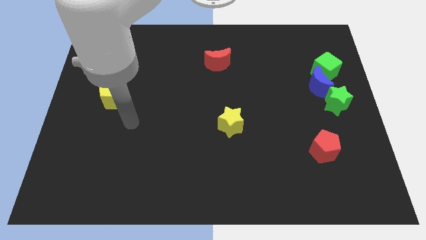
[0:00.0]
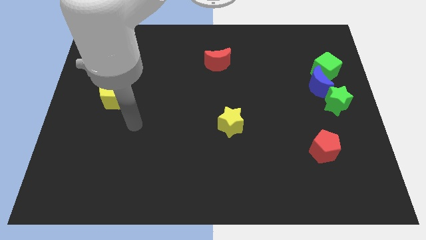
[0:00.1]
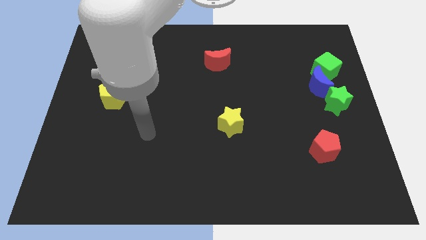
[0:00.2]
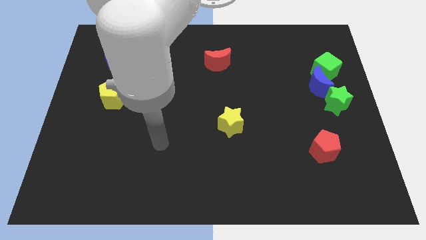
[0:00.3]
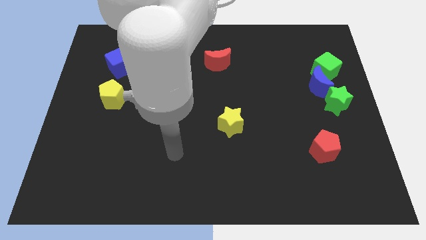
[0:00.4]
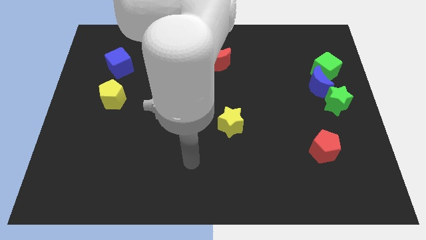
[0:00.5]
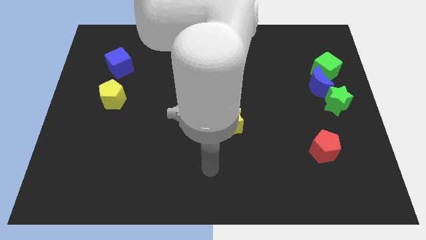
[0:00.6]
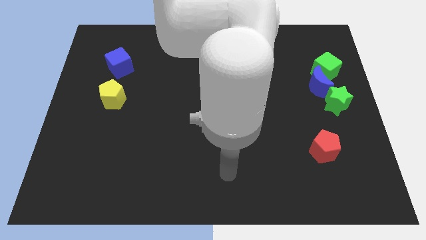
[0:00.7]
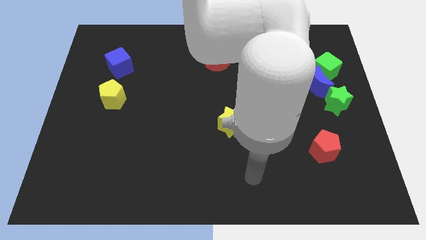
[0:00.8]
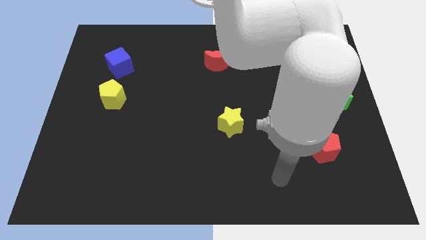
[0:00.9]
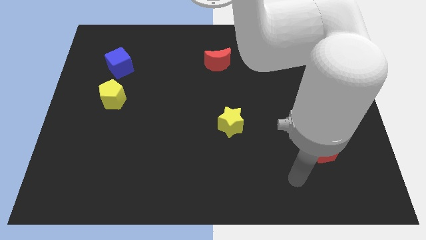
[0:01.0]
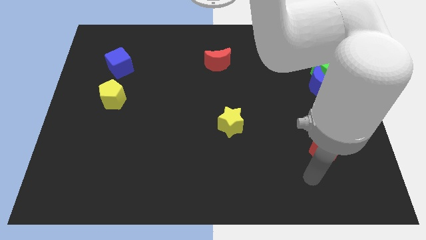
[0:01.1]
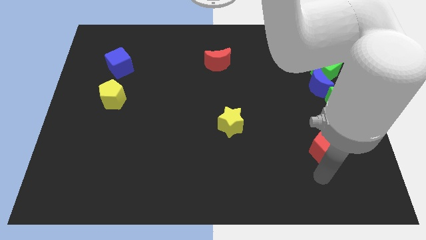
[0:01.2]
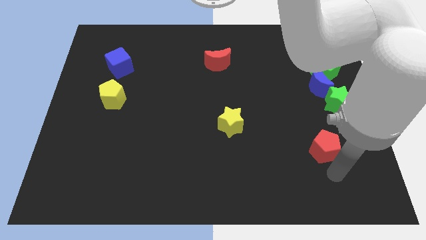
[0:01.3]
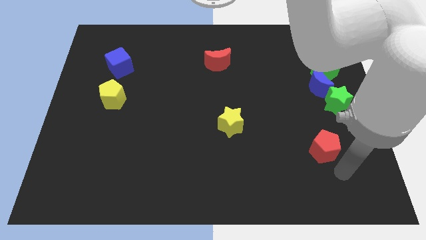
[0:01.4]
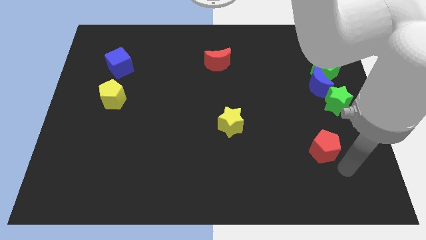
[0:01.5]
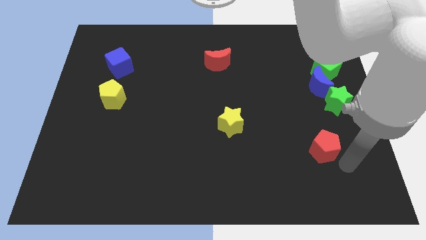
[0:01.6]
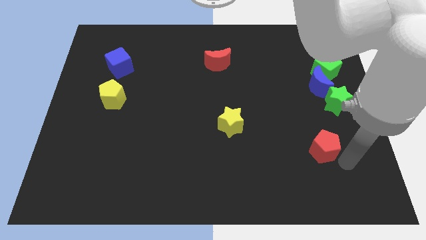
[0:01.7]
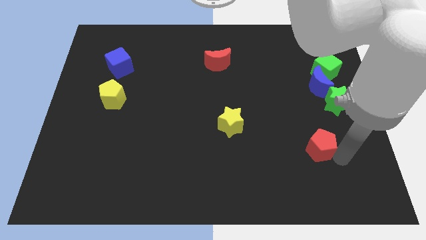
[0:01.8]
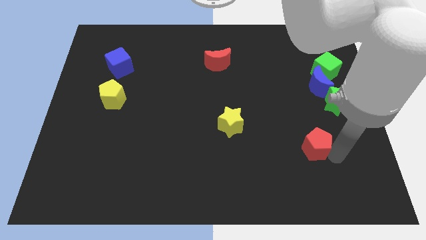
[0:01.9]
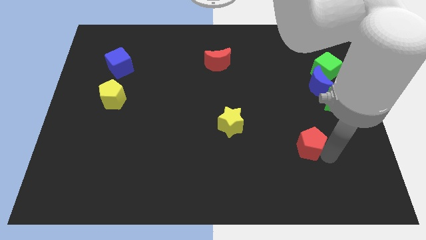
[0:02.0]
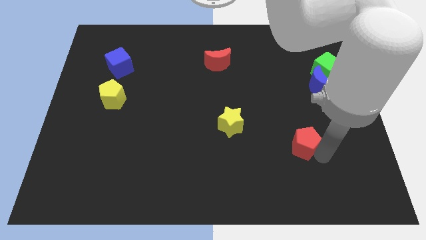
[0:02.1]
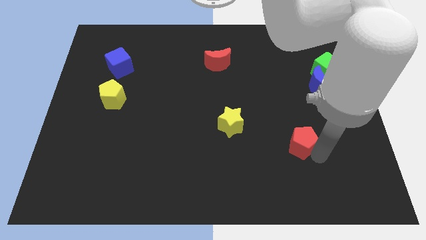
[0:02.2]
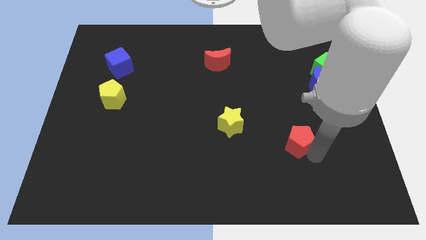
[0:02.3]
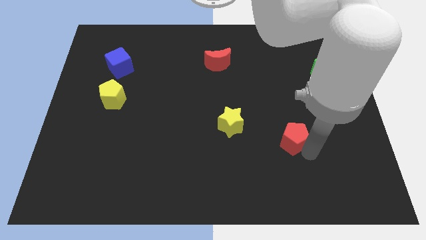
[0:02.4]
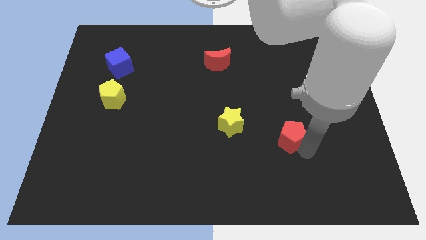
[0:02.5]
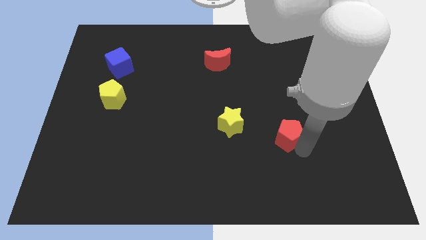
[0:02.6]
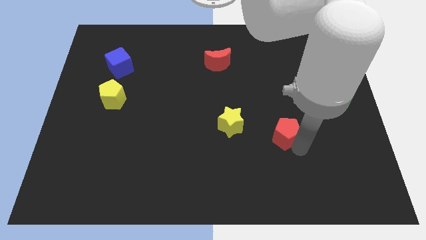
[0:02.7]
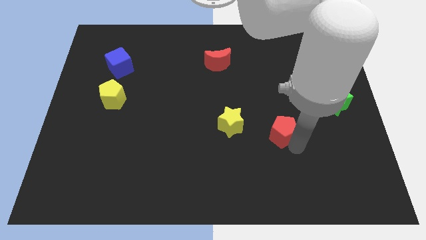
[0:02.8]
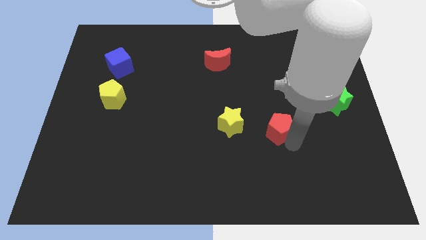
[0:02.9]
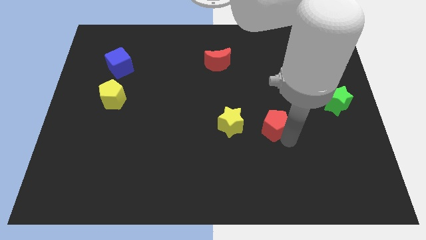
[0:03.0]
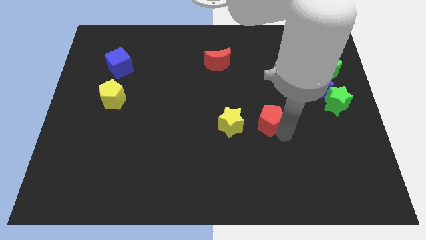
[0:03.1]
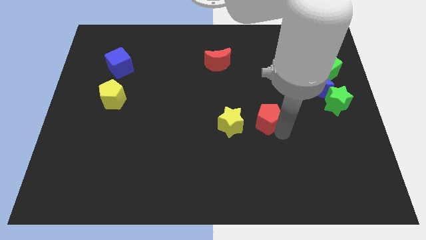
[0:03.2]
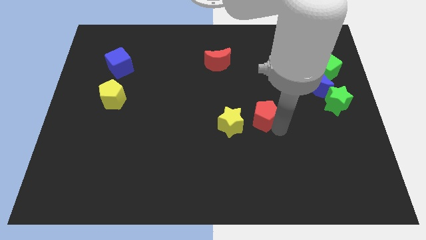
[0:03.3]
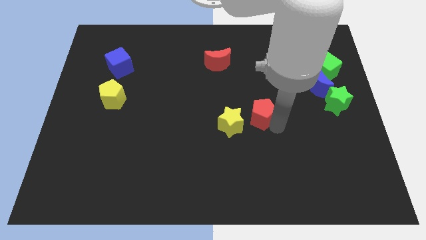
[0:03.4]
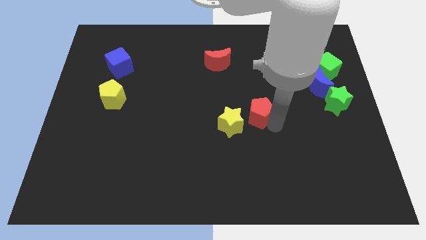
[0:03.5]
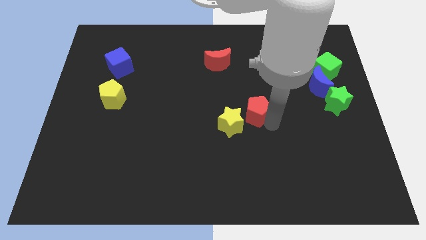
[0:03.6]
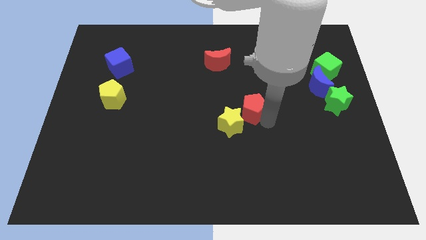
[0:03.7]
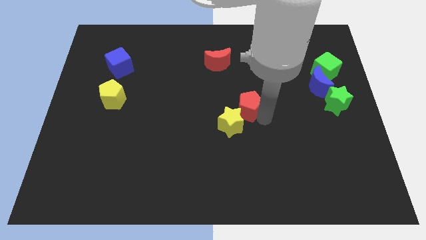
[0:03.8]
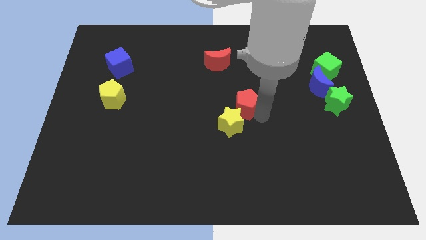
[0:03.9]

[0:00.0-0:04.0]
put the red pentagon next to the yellow star

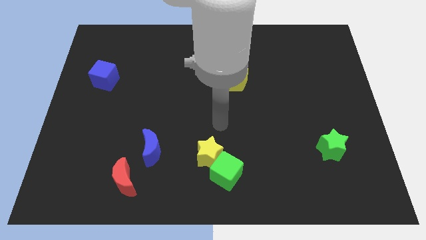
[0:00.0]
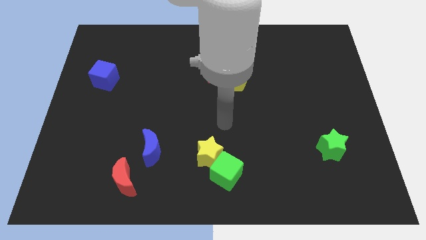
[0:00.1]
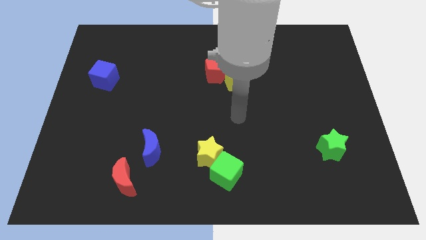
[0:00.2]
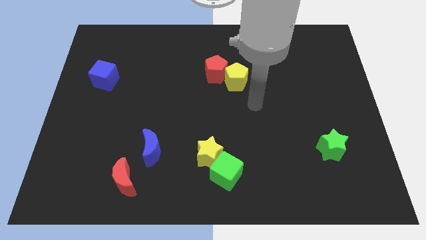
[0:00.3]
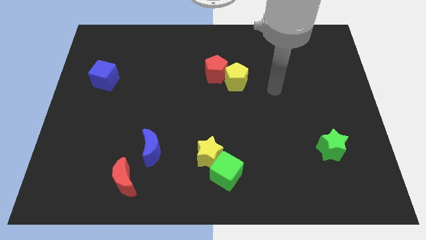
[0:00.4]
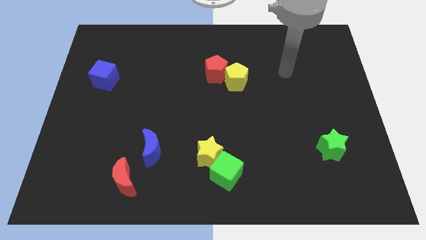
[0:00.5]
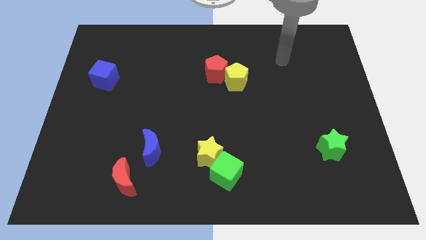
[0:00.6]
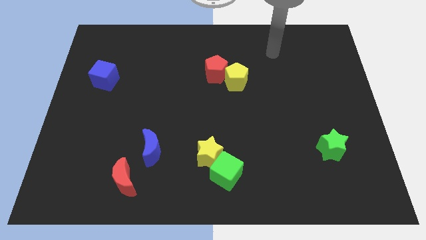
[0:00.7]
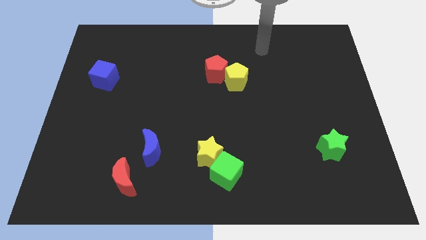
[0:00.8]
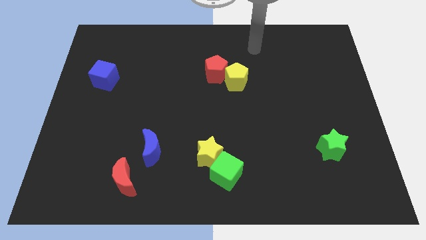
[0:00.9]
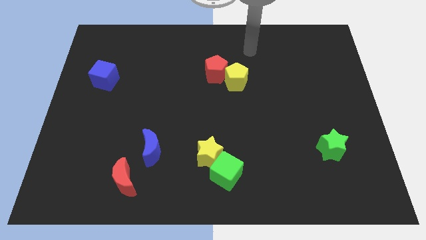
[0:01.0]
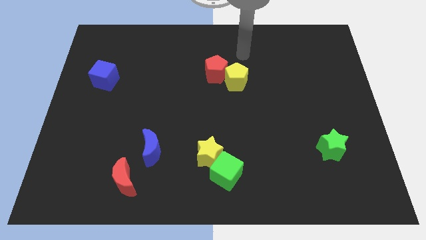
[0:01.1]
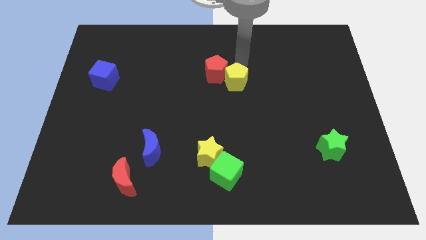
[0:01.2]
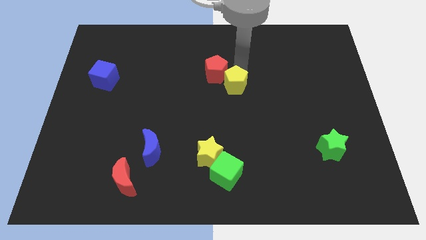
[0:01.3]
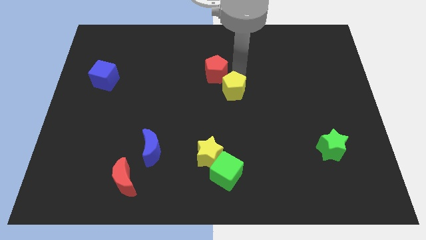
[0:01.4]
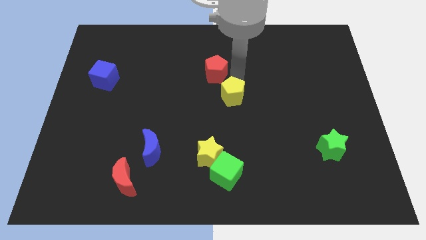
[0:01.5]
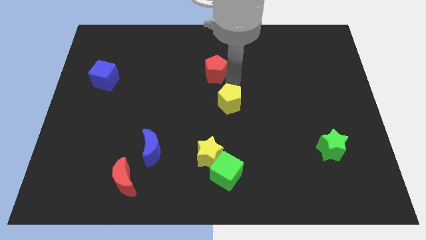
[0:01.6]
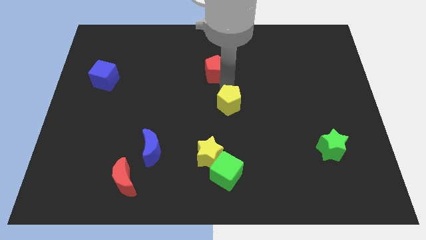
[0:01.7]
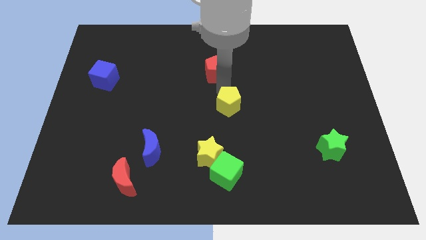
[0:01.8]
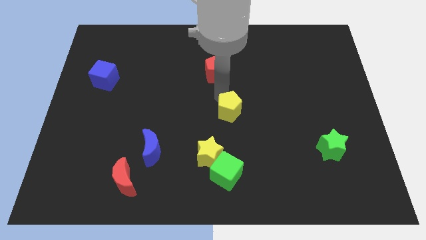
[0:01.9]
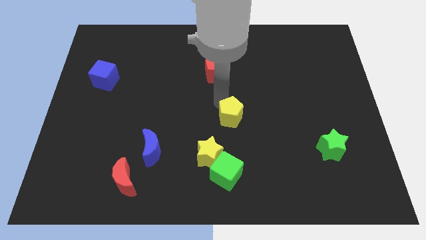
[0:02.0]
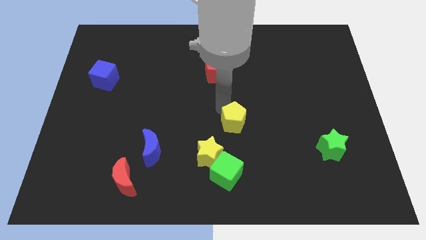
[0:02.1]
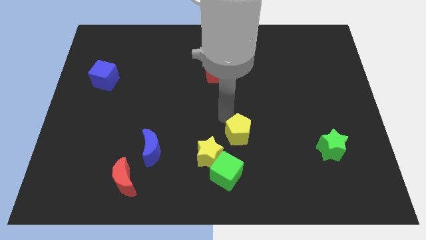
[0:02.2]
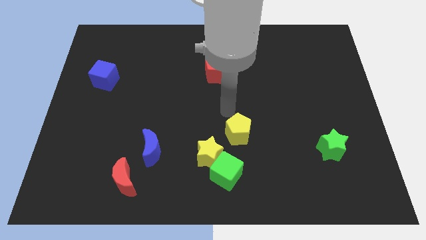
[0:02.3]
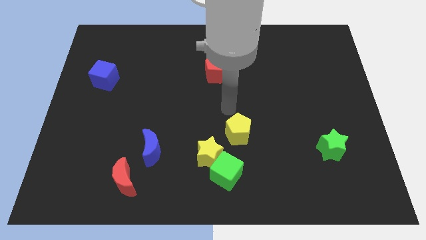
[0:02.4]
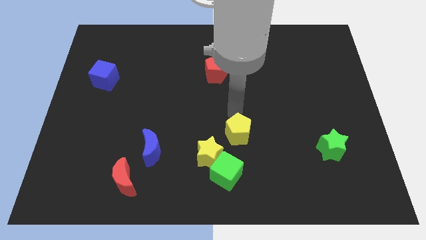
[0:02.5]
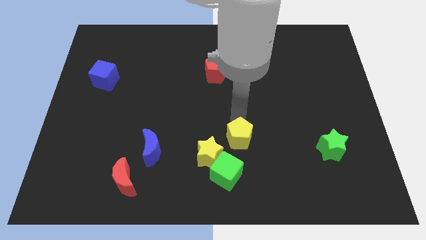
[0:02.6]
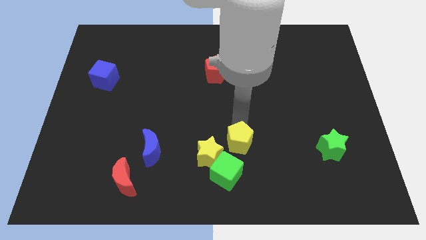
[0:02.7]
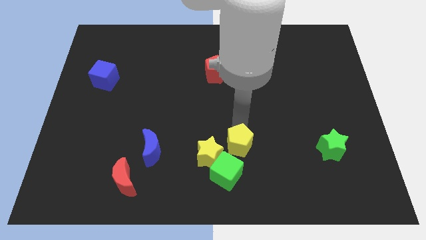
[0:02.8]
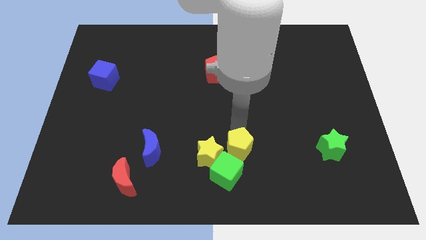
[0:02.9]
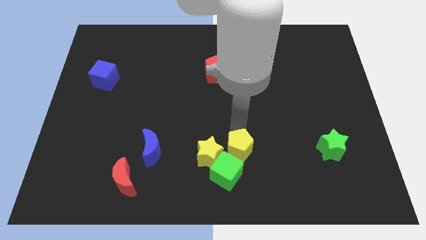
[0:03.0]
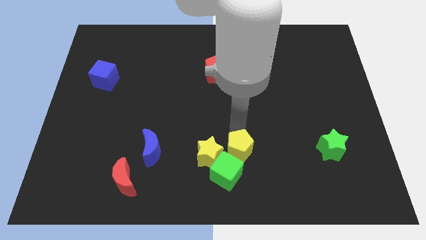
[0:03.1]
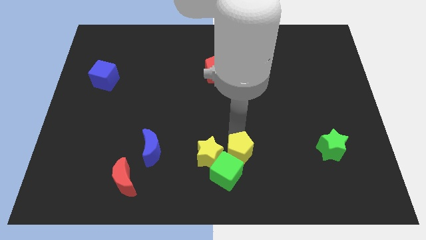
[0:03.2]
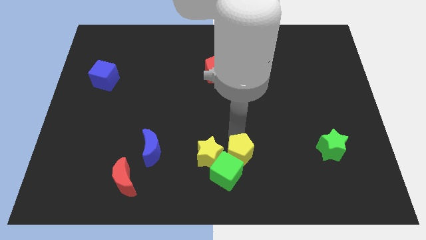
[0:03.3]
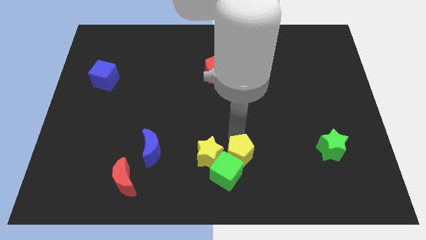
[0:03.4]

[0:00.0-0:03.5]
put the yellow pentagon to the green cube

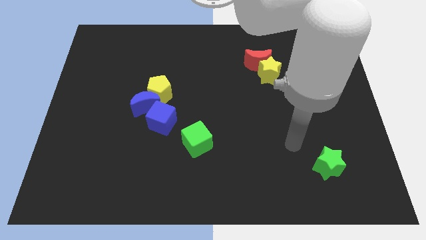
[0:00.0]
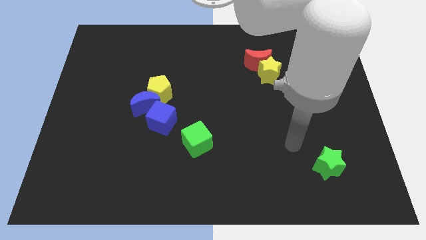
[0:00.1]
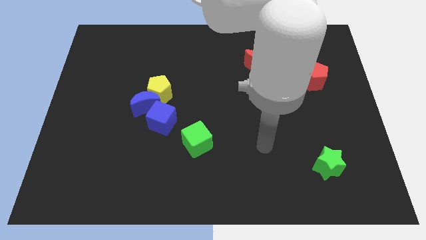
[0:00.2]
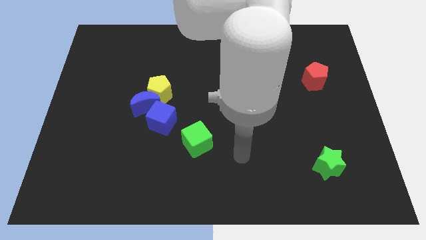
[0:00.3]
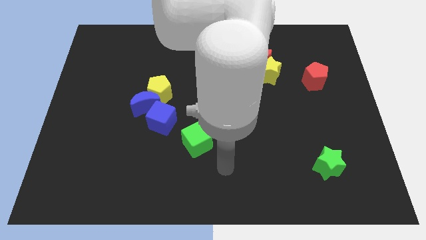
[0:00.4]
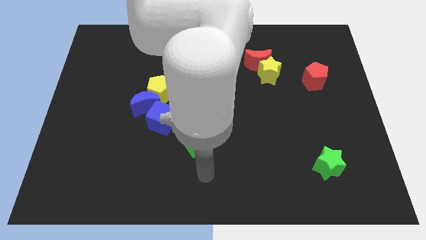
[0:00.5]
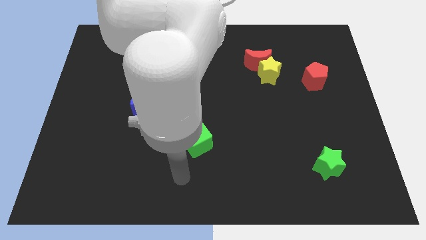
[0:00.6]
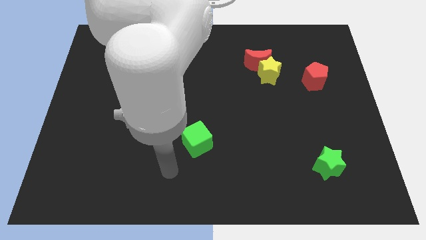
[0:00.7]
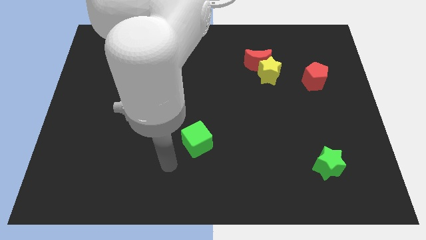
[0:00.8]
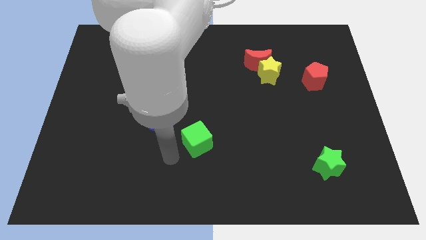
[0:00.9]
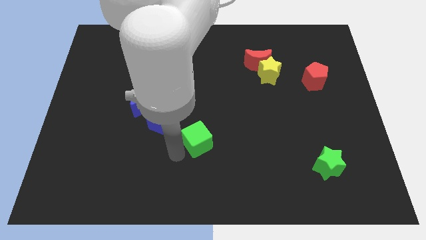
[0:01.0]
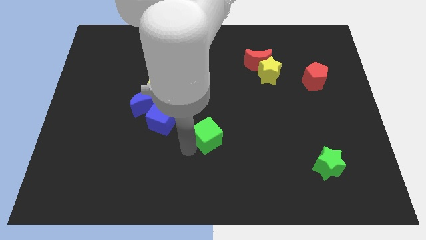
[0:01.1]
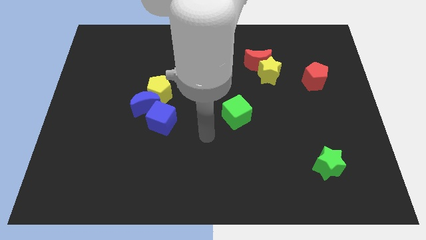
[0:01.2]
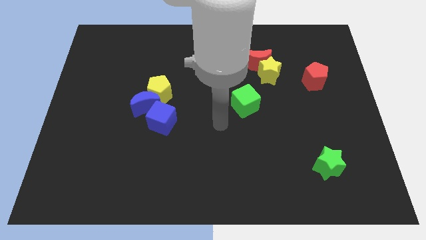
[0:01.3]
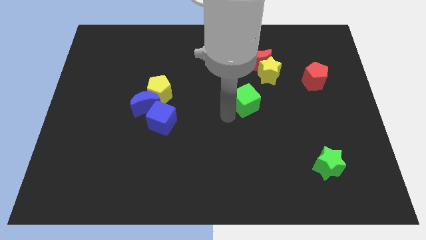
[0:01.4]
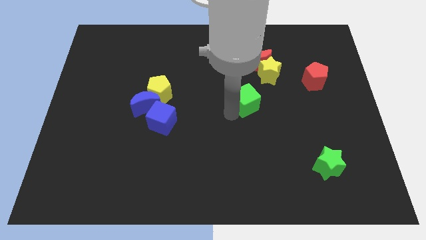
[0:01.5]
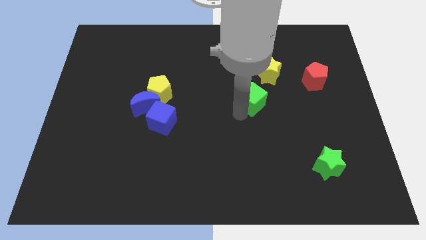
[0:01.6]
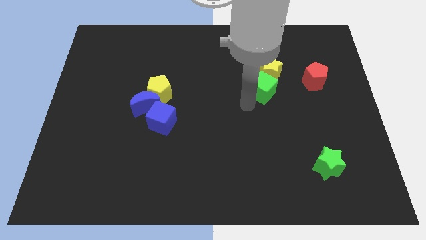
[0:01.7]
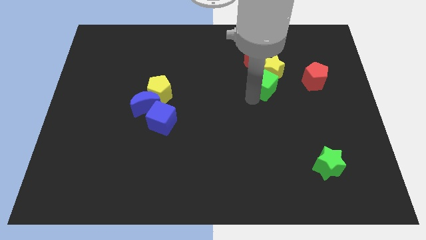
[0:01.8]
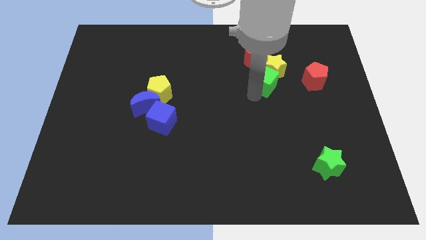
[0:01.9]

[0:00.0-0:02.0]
slide the green cube close to the yellow star
